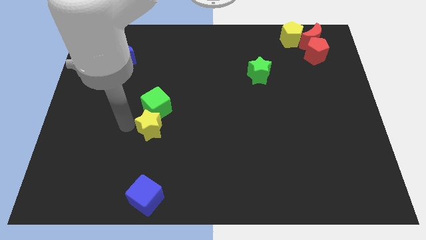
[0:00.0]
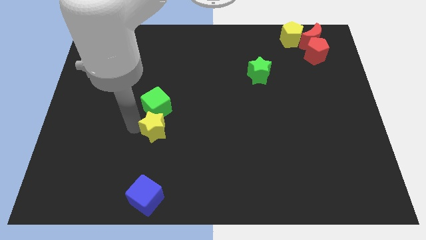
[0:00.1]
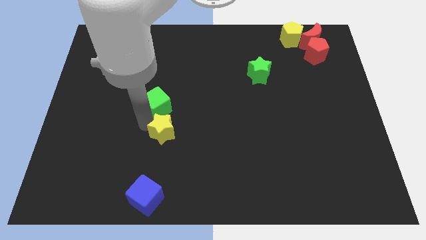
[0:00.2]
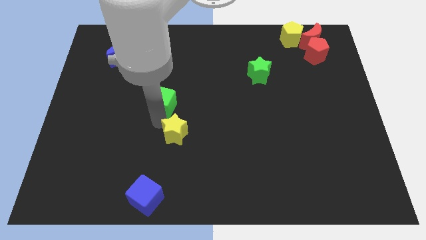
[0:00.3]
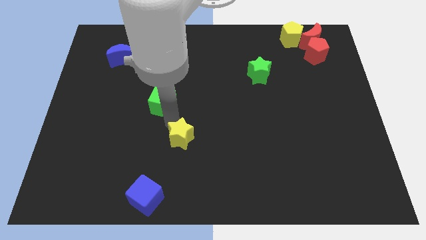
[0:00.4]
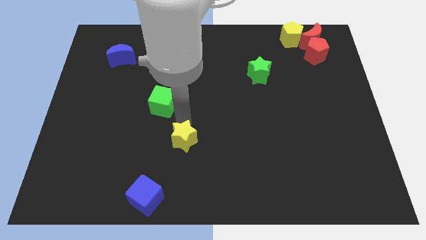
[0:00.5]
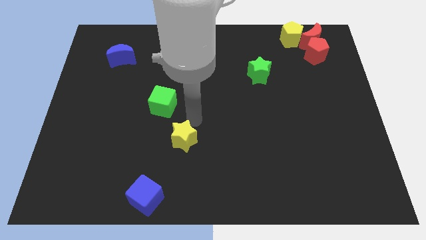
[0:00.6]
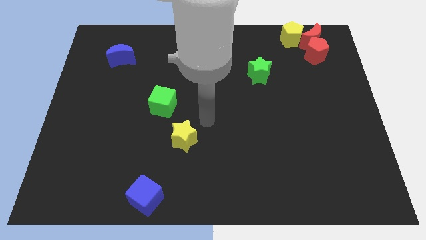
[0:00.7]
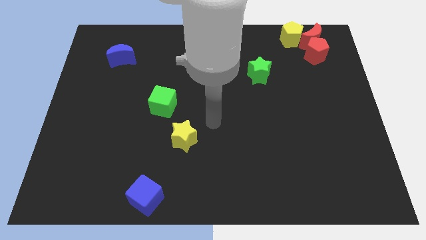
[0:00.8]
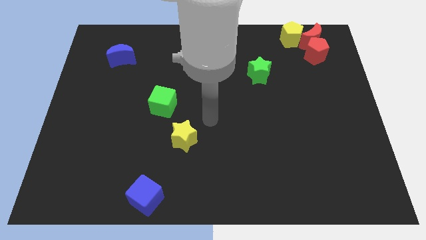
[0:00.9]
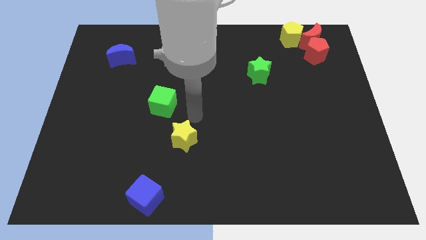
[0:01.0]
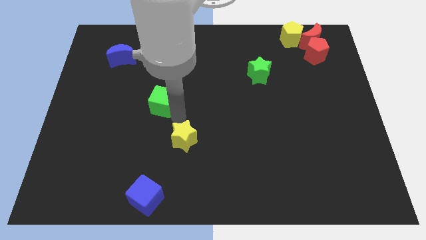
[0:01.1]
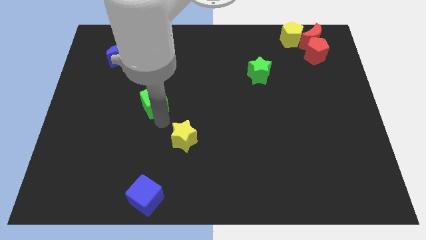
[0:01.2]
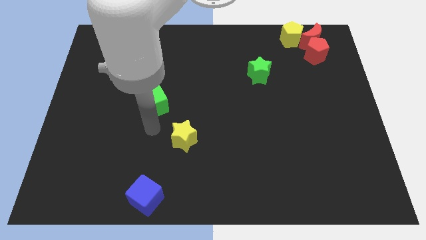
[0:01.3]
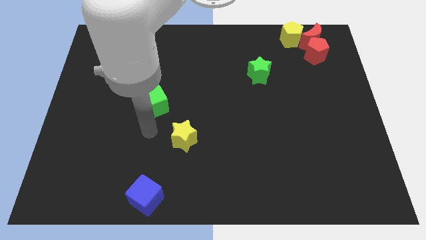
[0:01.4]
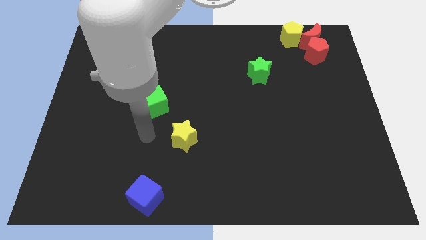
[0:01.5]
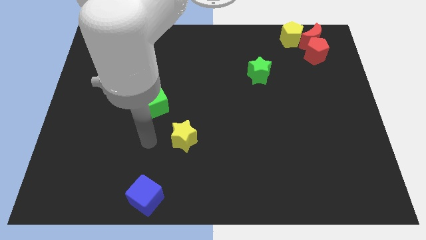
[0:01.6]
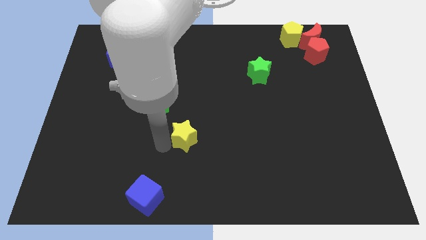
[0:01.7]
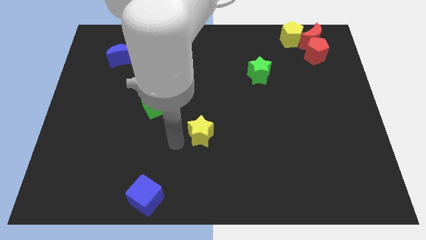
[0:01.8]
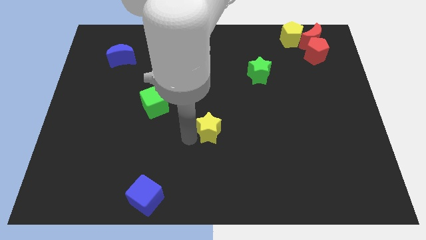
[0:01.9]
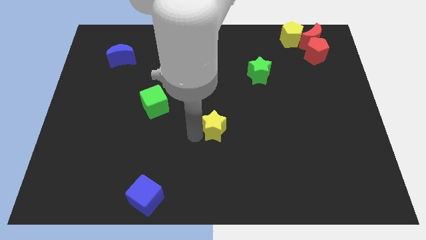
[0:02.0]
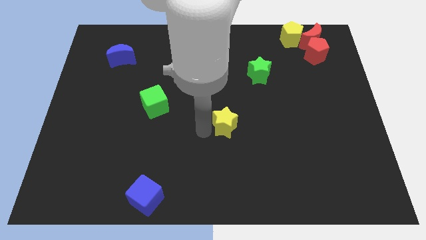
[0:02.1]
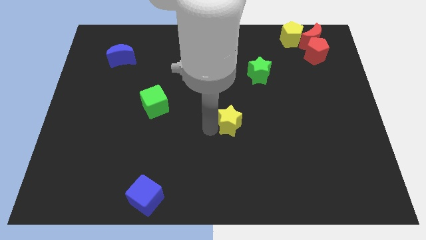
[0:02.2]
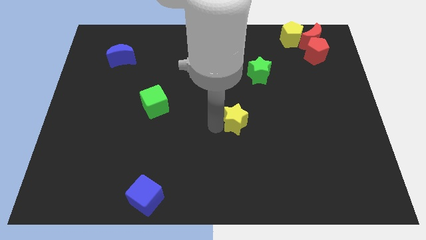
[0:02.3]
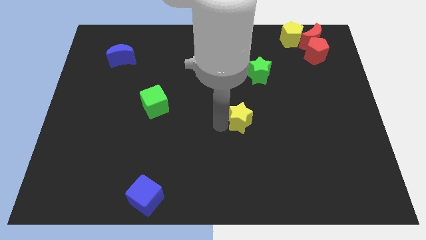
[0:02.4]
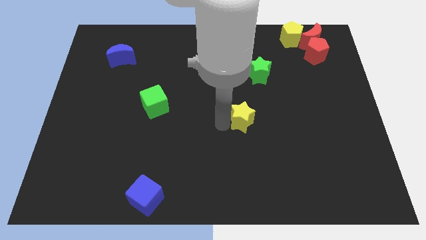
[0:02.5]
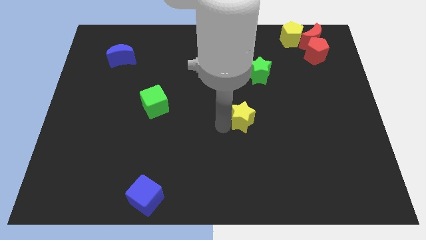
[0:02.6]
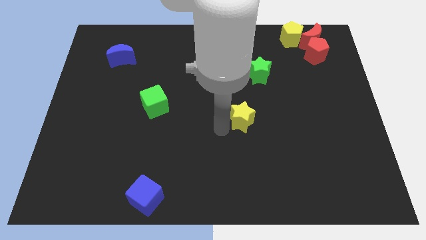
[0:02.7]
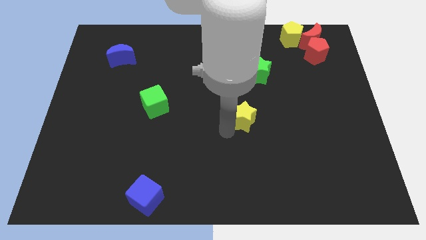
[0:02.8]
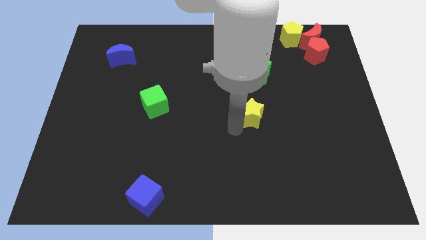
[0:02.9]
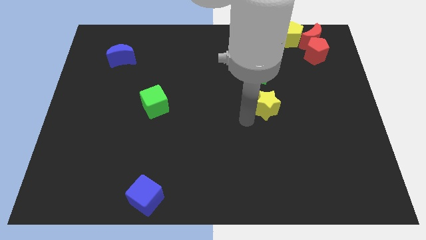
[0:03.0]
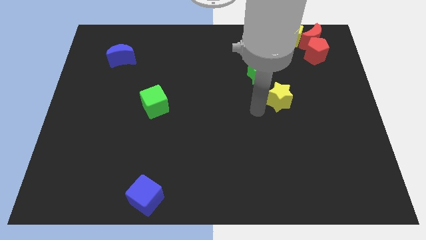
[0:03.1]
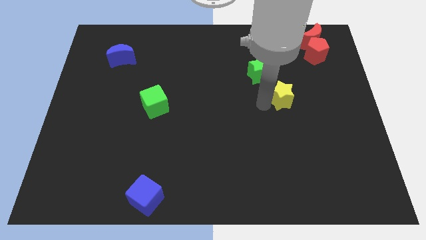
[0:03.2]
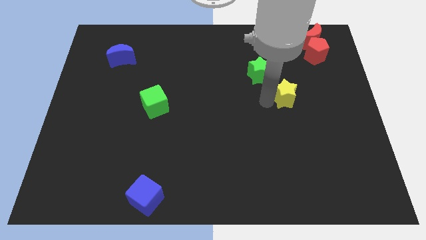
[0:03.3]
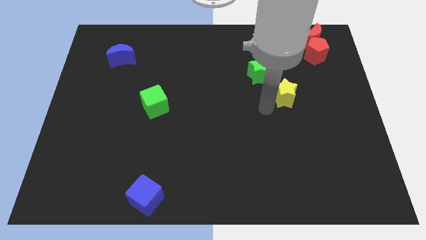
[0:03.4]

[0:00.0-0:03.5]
move yellow star towards top right

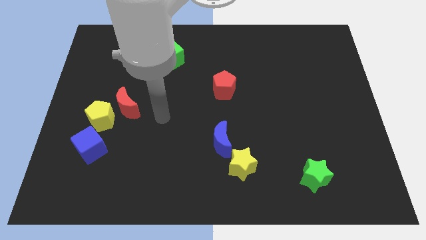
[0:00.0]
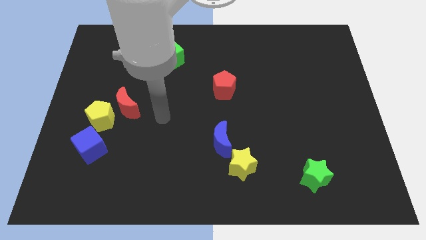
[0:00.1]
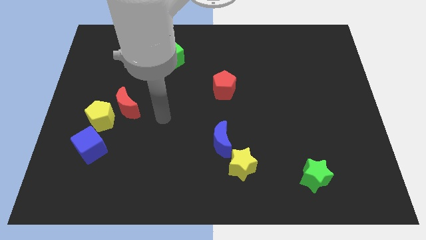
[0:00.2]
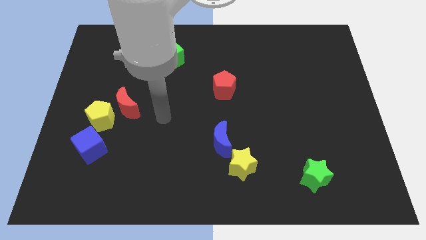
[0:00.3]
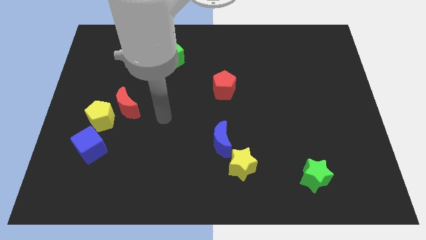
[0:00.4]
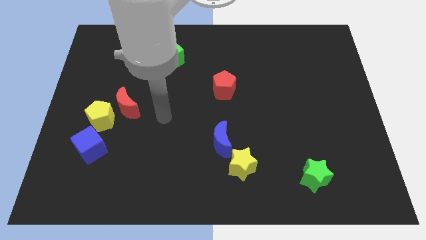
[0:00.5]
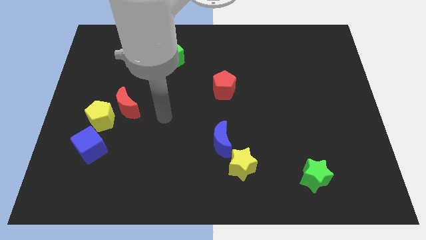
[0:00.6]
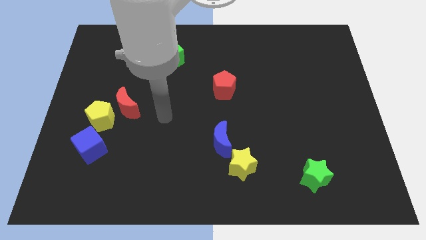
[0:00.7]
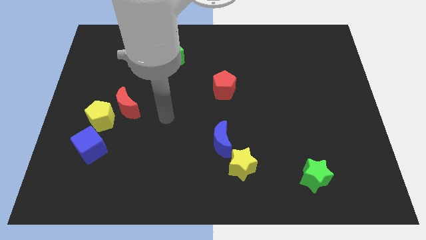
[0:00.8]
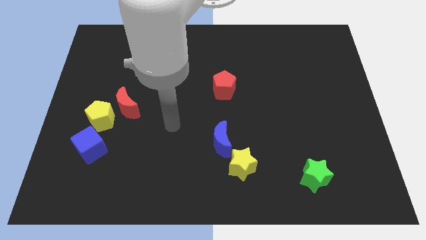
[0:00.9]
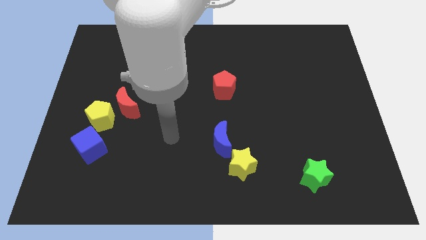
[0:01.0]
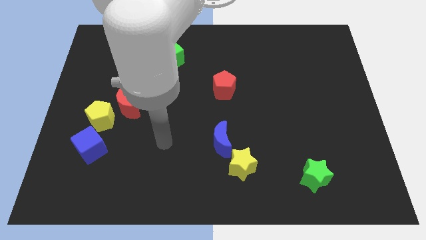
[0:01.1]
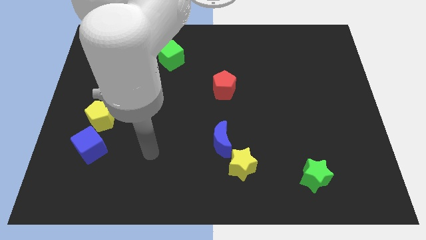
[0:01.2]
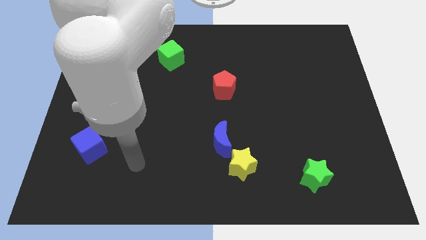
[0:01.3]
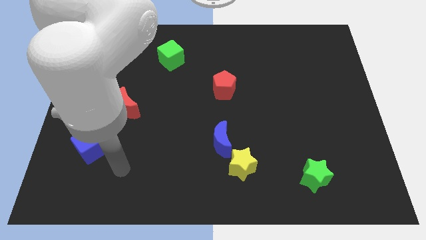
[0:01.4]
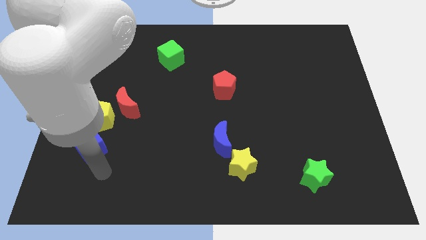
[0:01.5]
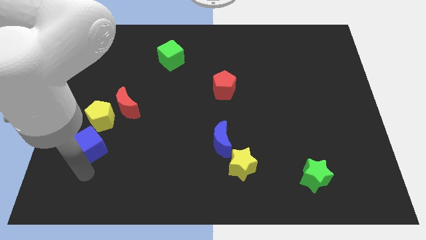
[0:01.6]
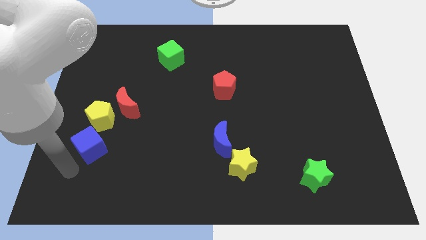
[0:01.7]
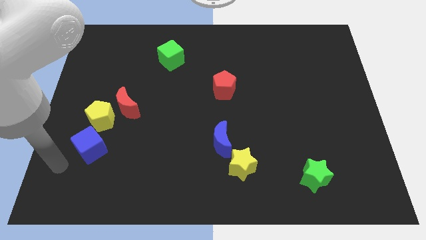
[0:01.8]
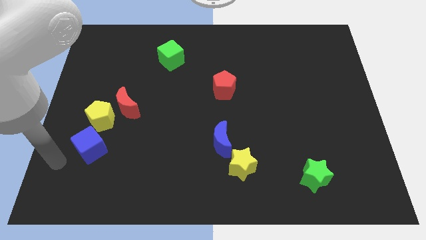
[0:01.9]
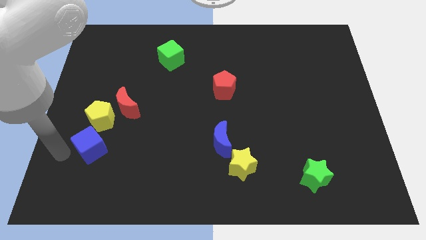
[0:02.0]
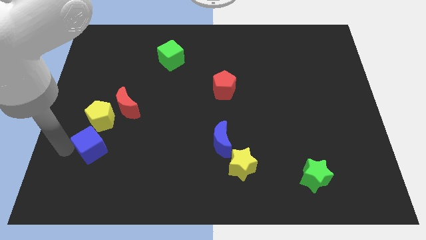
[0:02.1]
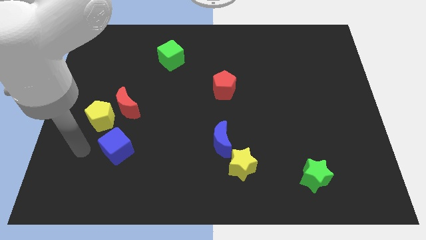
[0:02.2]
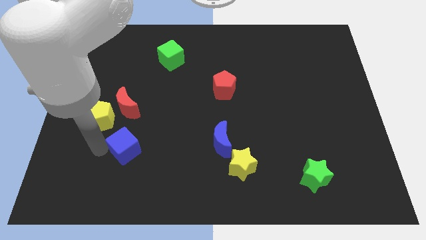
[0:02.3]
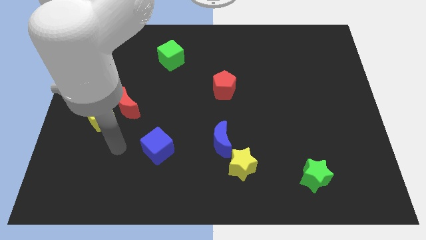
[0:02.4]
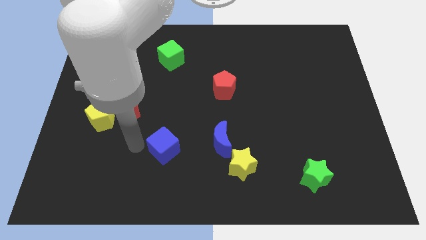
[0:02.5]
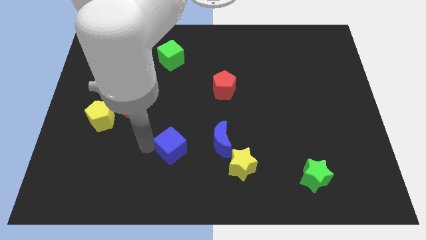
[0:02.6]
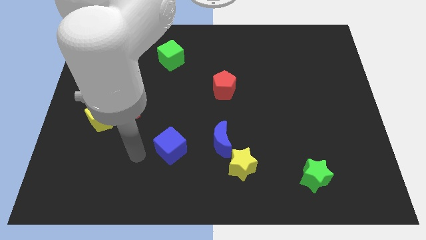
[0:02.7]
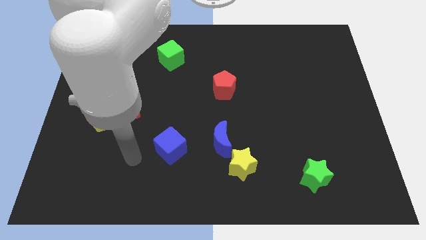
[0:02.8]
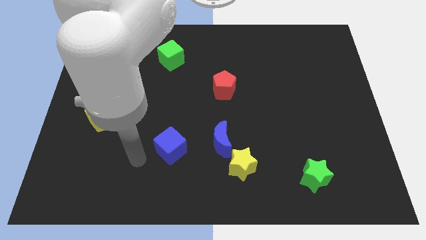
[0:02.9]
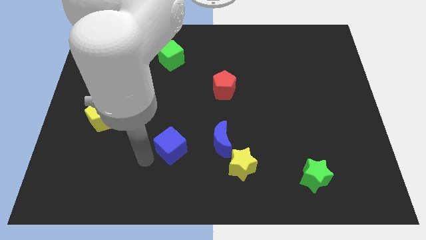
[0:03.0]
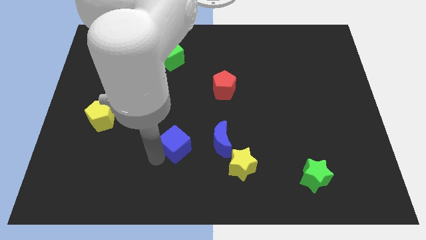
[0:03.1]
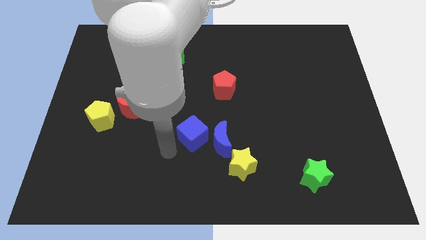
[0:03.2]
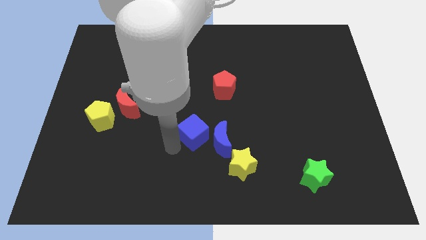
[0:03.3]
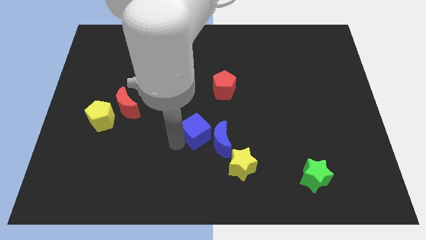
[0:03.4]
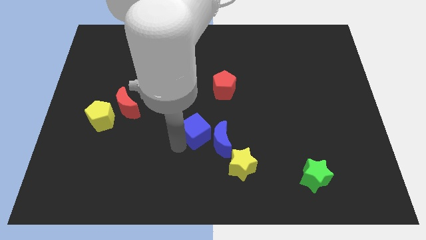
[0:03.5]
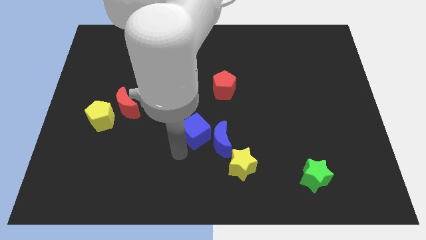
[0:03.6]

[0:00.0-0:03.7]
push the blue cube towards the left of blue crescent

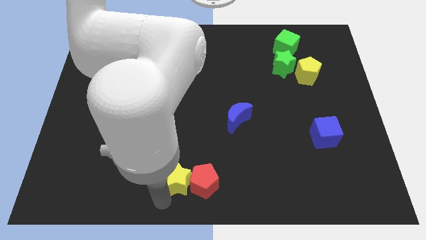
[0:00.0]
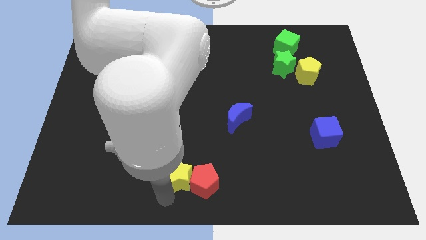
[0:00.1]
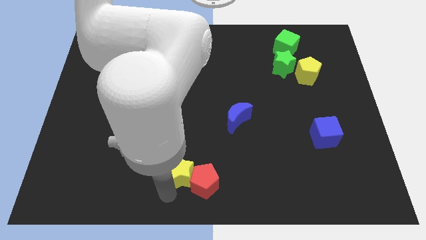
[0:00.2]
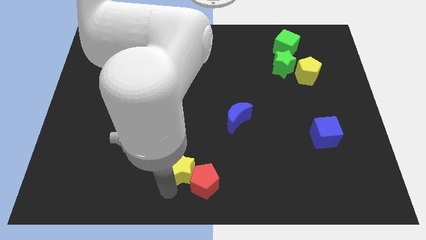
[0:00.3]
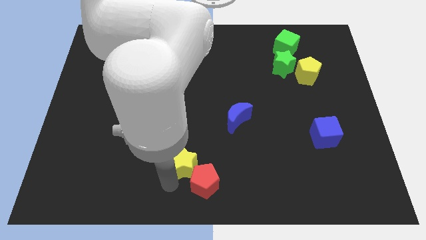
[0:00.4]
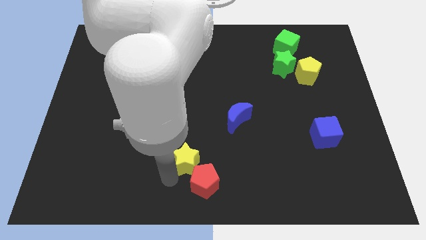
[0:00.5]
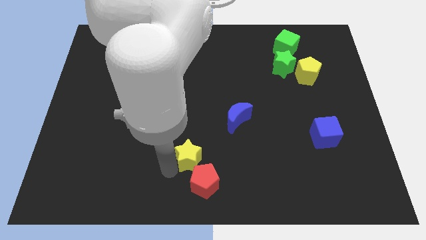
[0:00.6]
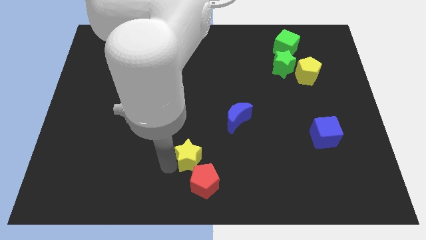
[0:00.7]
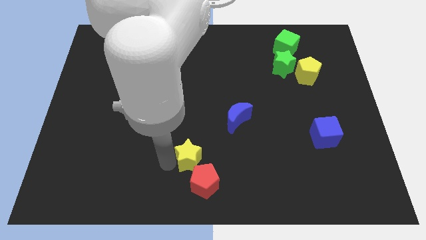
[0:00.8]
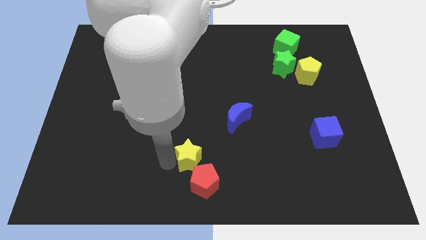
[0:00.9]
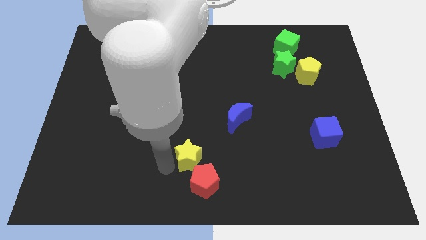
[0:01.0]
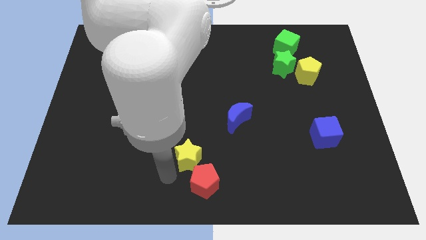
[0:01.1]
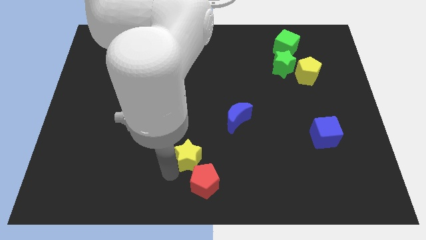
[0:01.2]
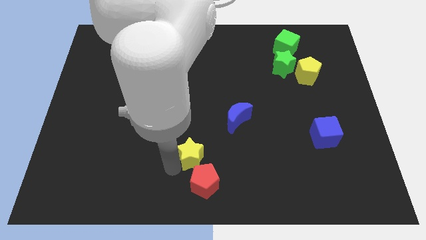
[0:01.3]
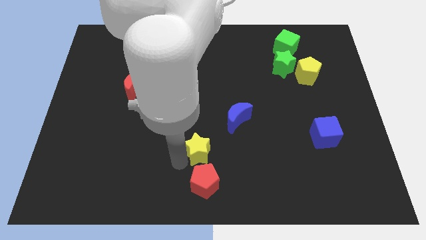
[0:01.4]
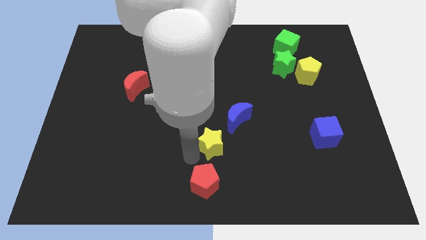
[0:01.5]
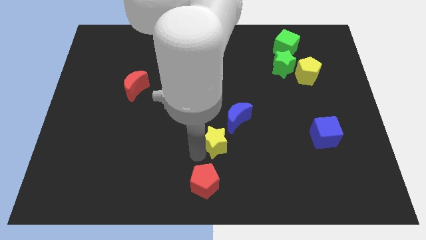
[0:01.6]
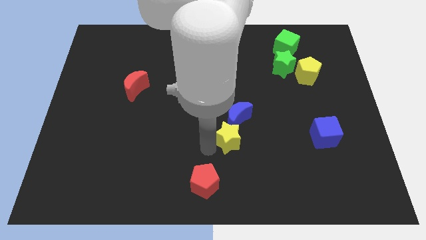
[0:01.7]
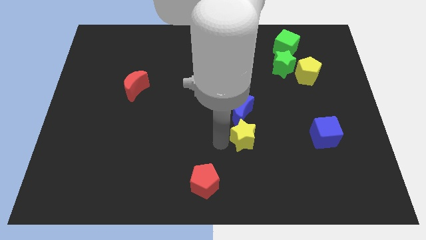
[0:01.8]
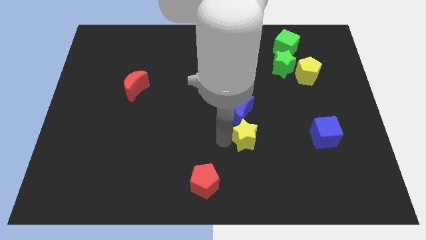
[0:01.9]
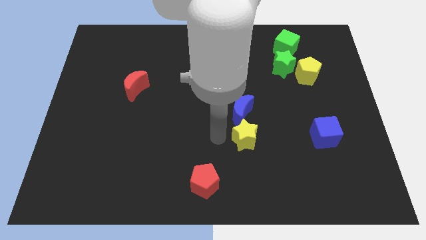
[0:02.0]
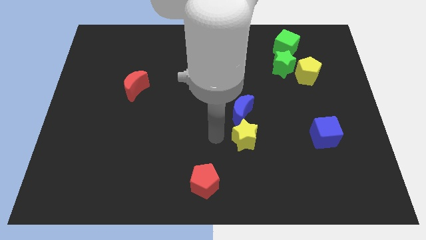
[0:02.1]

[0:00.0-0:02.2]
place the yellow star below the blue moon
